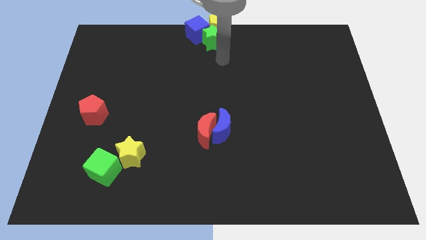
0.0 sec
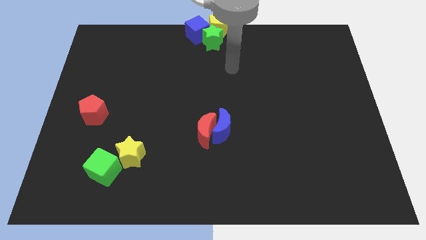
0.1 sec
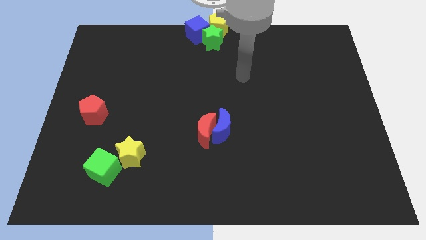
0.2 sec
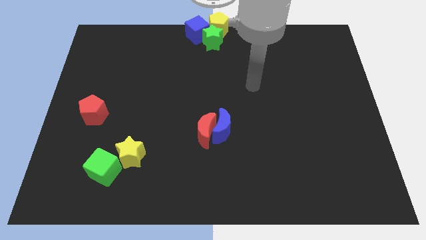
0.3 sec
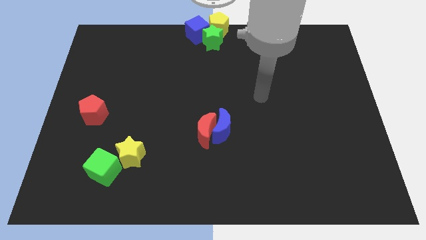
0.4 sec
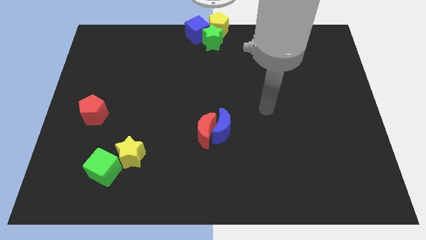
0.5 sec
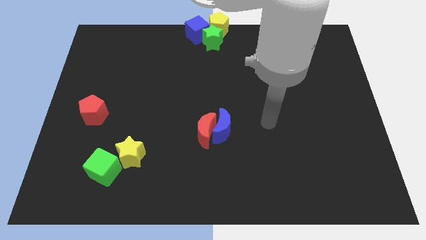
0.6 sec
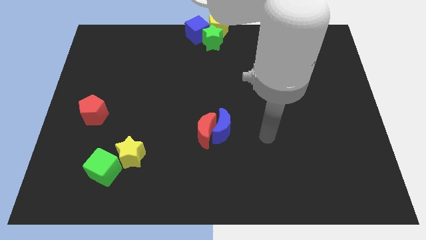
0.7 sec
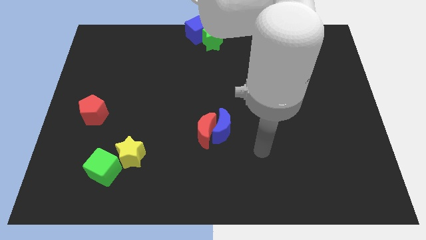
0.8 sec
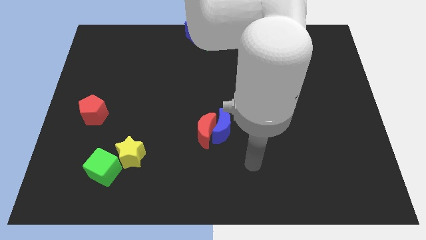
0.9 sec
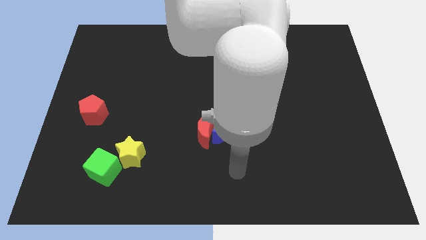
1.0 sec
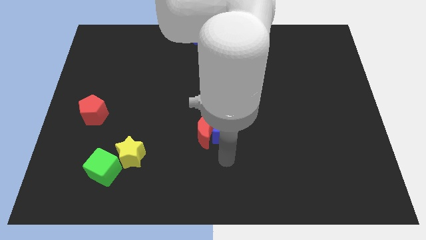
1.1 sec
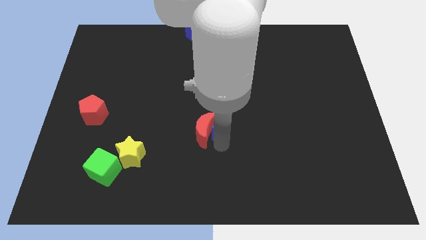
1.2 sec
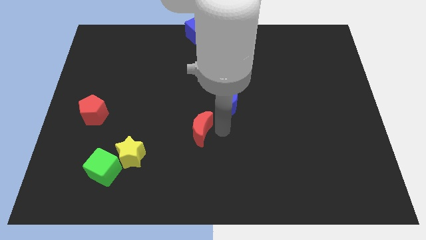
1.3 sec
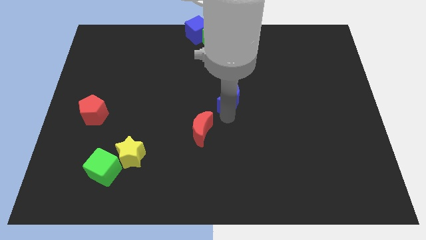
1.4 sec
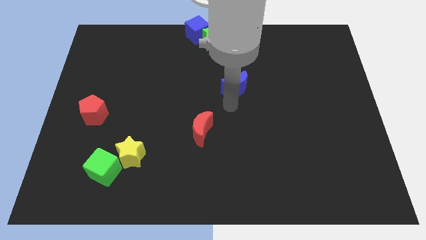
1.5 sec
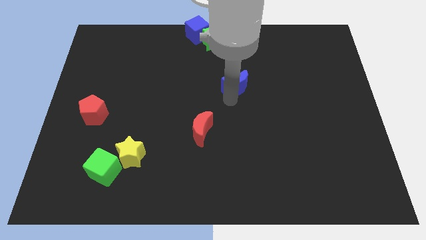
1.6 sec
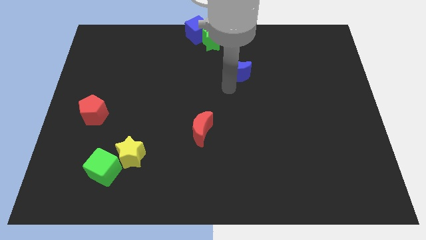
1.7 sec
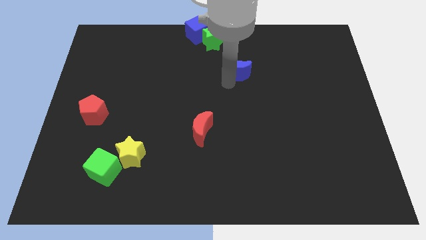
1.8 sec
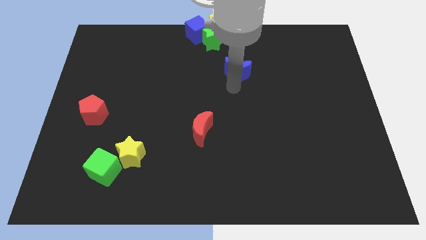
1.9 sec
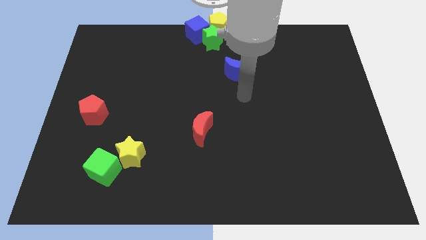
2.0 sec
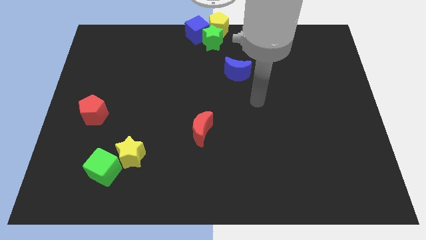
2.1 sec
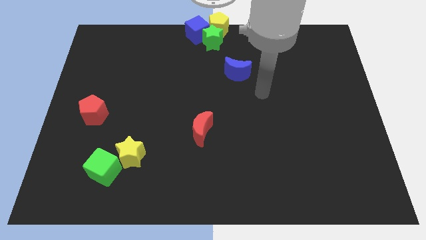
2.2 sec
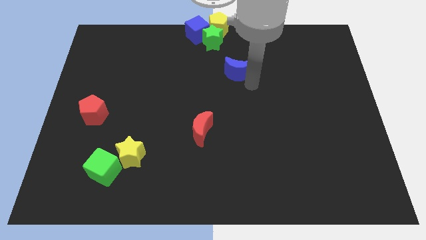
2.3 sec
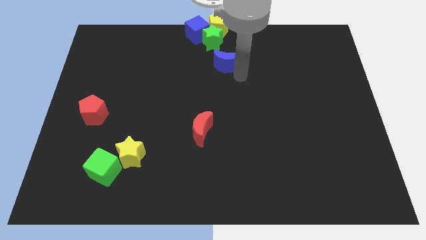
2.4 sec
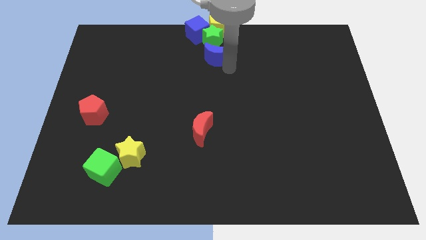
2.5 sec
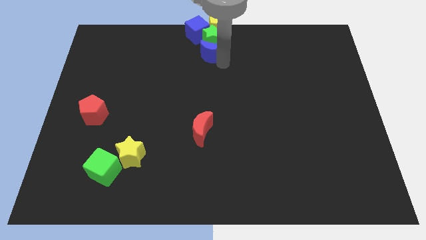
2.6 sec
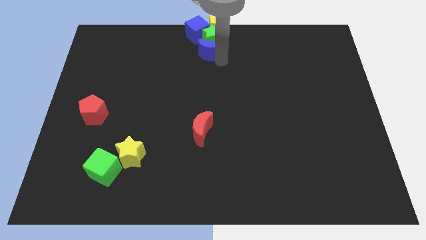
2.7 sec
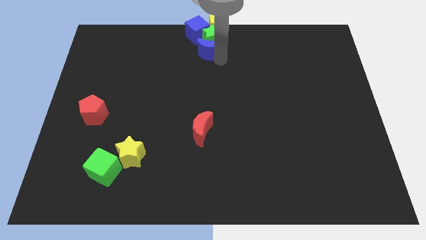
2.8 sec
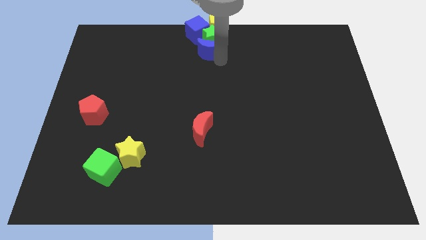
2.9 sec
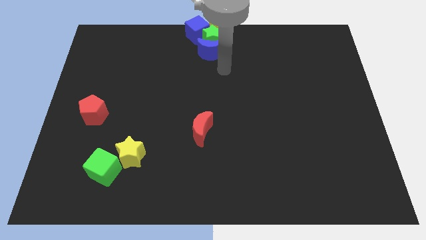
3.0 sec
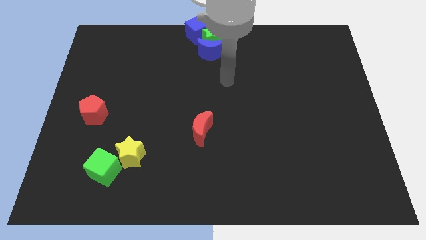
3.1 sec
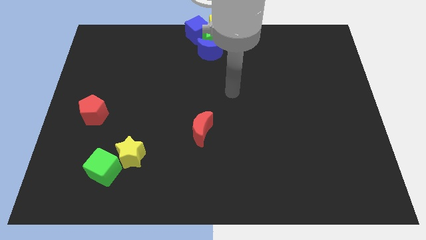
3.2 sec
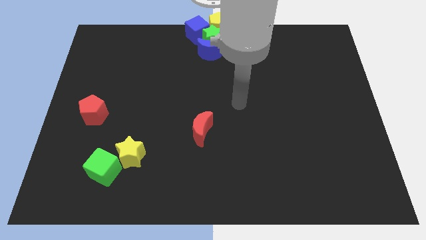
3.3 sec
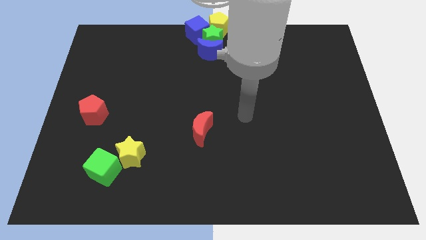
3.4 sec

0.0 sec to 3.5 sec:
push the blue crescent into the green star

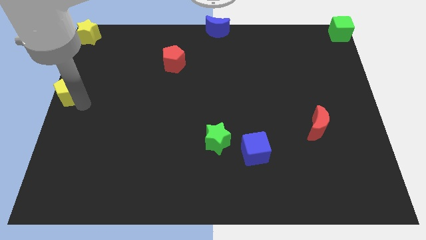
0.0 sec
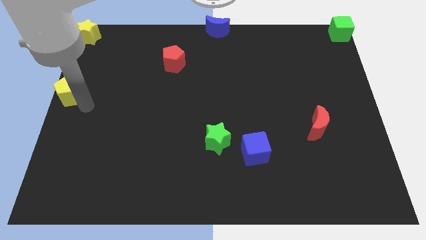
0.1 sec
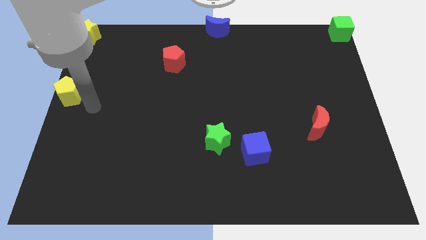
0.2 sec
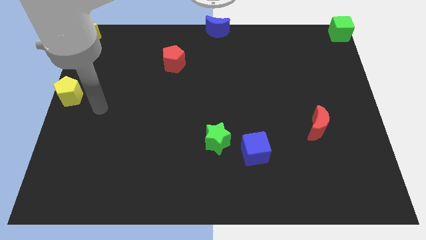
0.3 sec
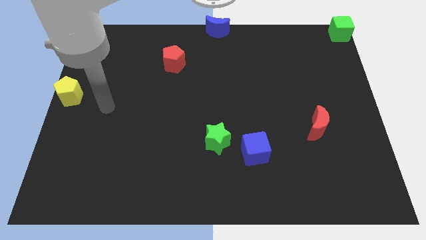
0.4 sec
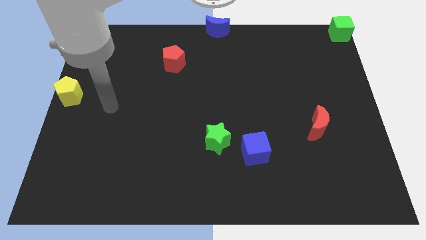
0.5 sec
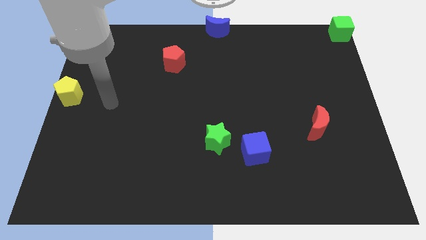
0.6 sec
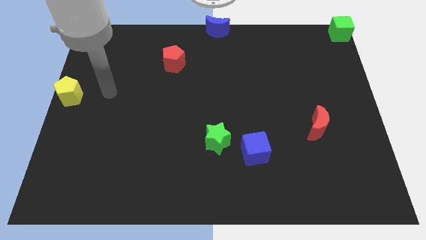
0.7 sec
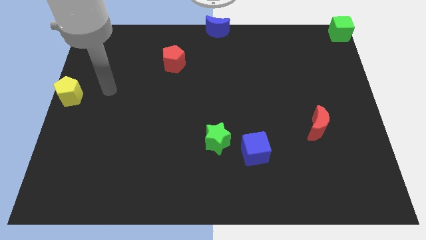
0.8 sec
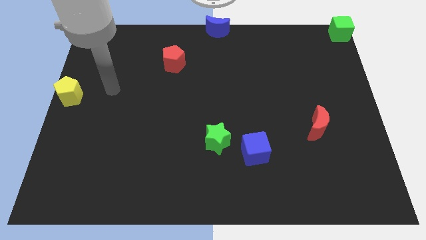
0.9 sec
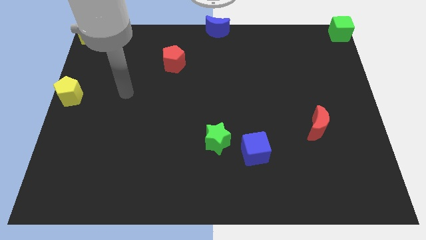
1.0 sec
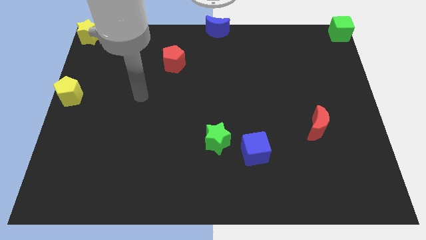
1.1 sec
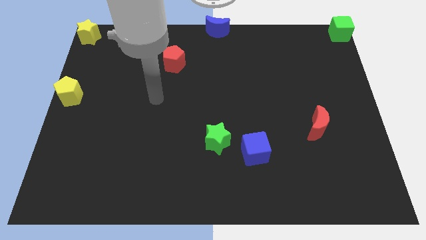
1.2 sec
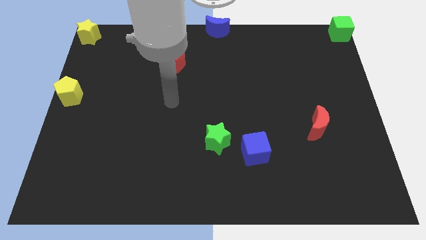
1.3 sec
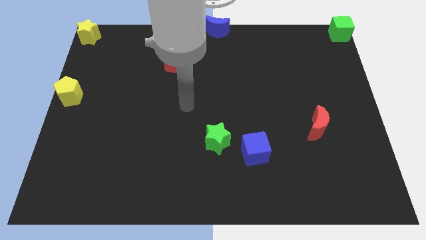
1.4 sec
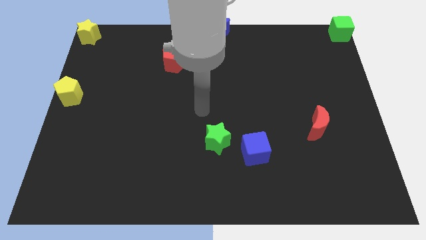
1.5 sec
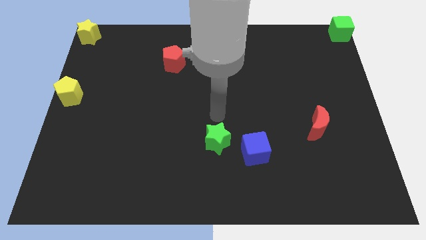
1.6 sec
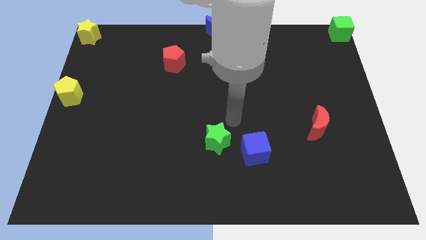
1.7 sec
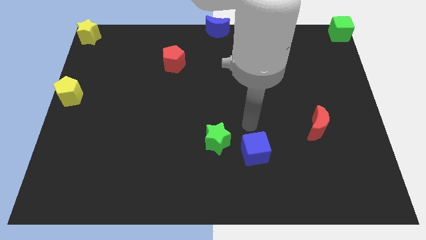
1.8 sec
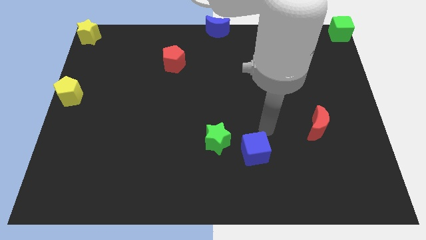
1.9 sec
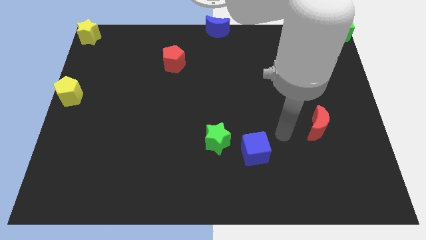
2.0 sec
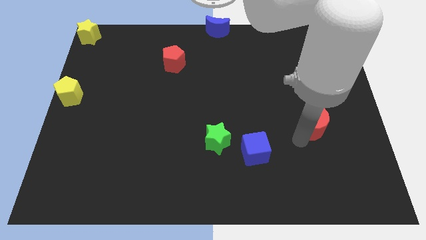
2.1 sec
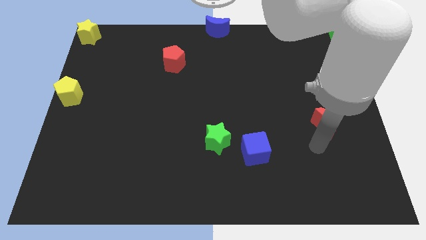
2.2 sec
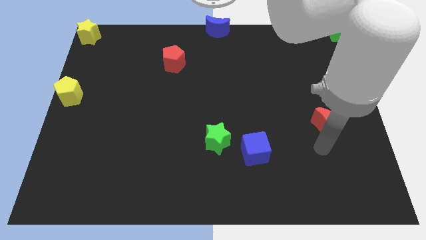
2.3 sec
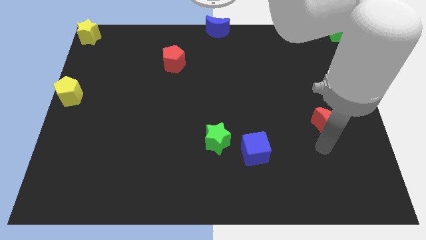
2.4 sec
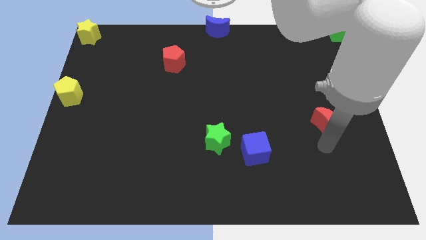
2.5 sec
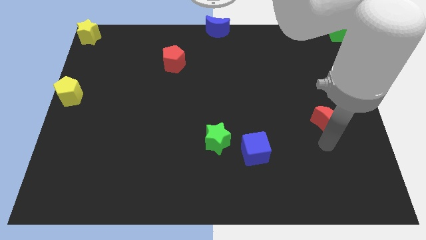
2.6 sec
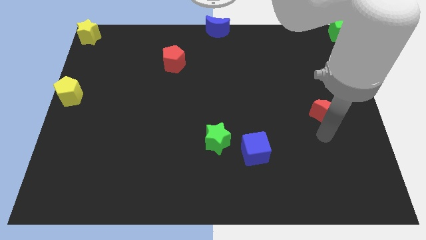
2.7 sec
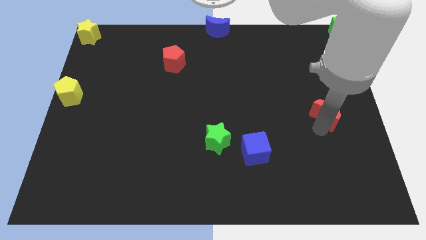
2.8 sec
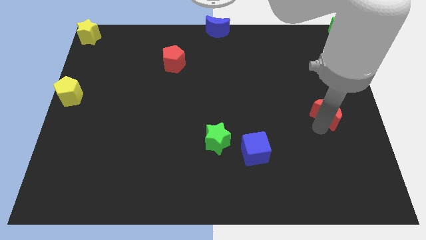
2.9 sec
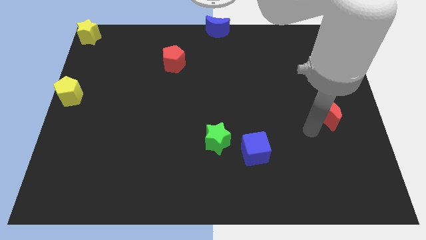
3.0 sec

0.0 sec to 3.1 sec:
push the re moon slightly up

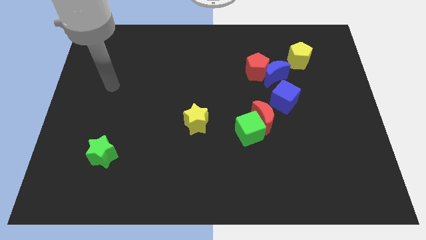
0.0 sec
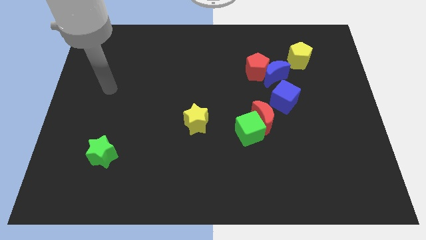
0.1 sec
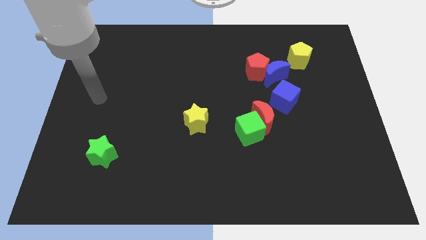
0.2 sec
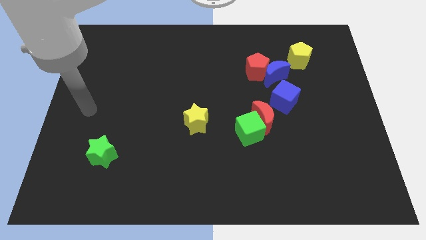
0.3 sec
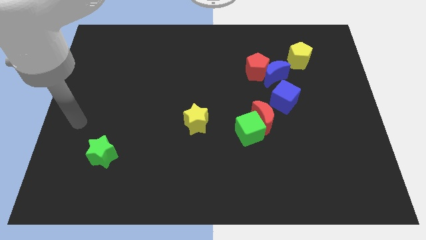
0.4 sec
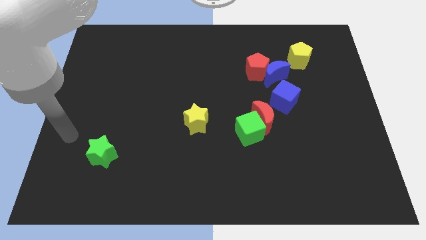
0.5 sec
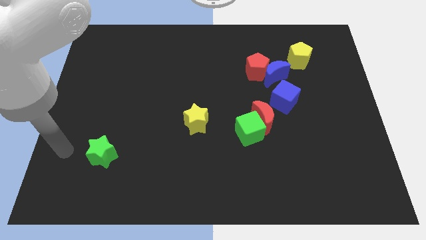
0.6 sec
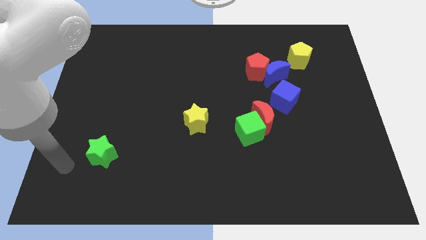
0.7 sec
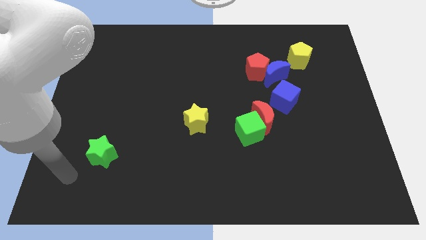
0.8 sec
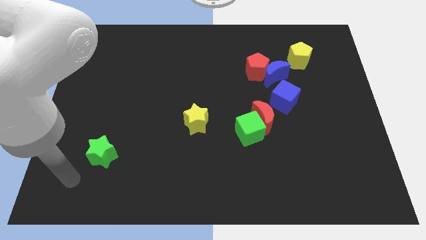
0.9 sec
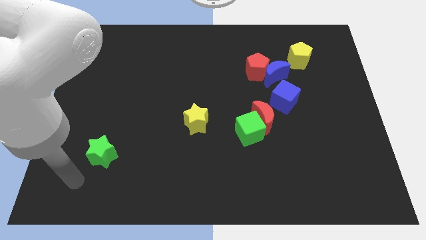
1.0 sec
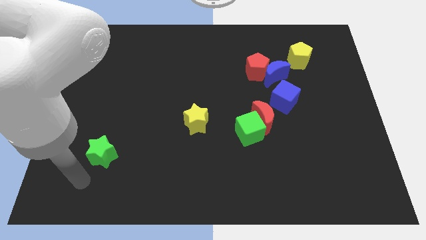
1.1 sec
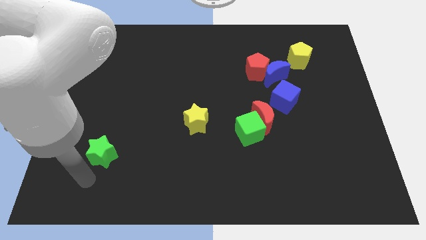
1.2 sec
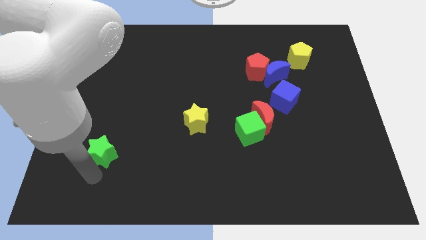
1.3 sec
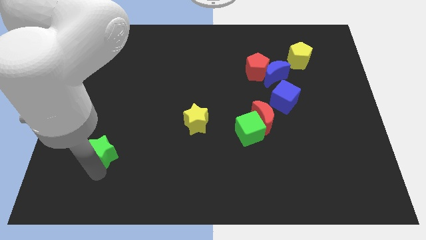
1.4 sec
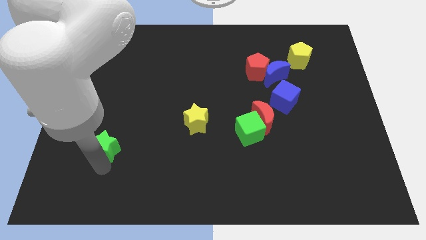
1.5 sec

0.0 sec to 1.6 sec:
move the arm to the bottom of green star

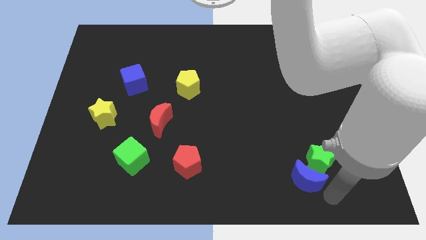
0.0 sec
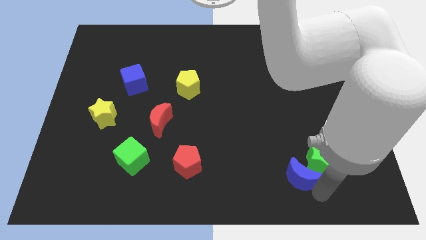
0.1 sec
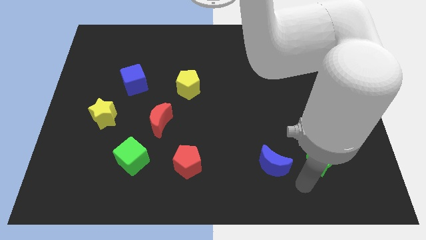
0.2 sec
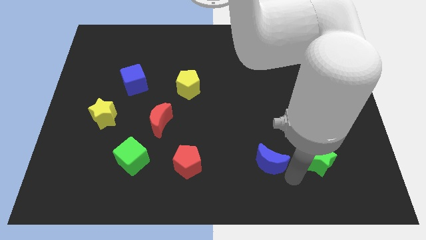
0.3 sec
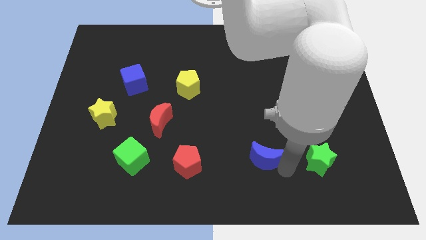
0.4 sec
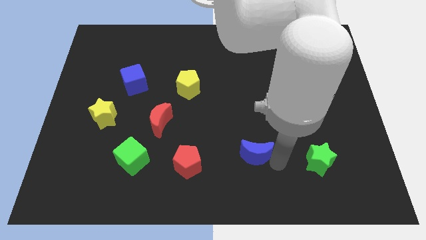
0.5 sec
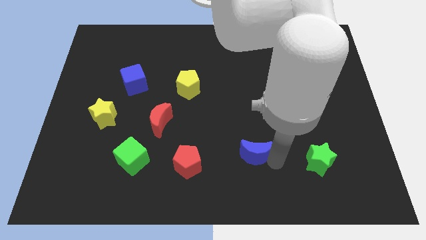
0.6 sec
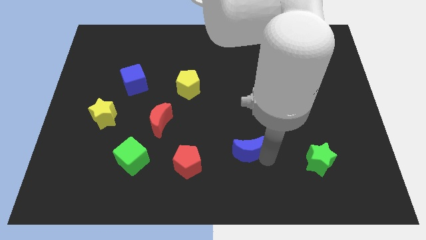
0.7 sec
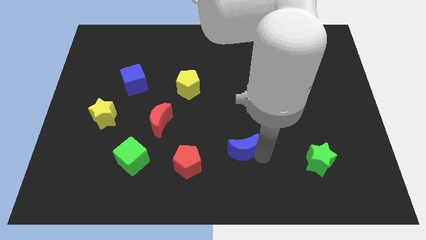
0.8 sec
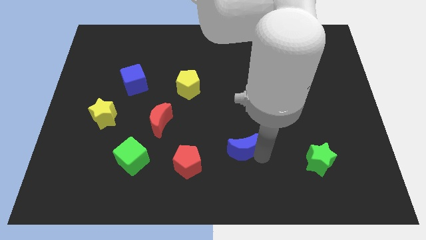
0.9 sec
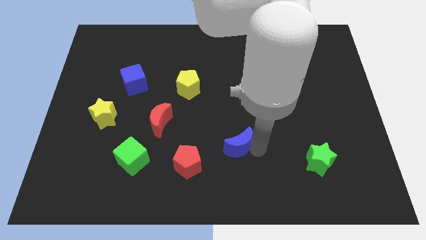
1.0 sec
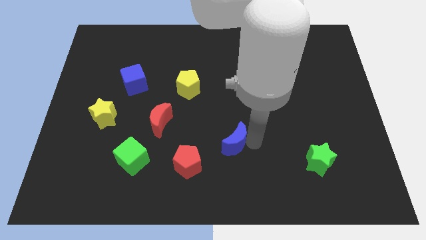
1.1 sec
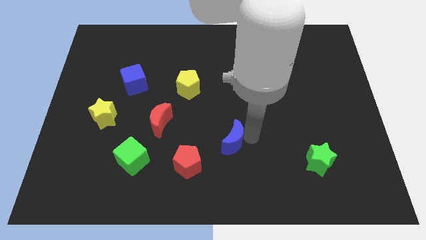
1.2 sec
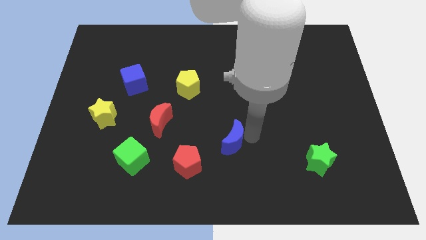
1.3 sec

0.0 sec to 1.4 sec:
move the blue crescent away from the green star
